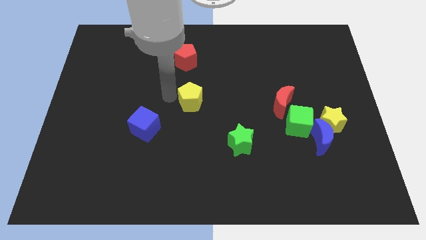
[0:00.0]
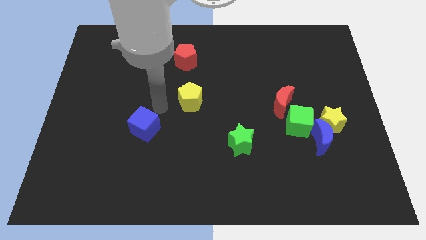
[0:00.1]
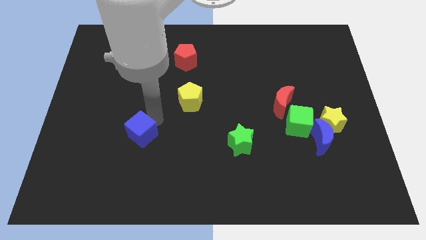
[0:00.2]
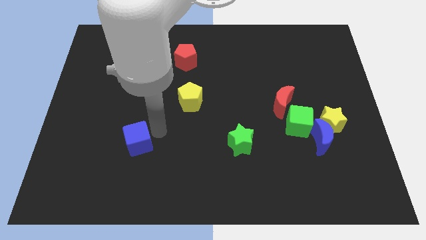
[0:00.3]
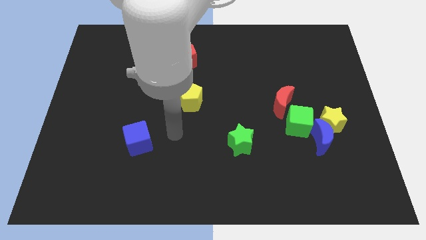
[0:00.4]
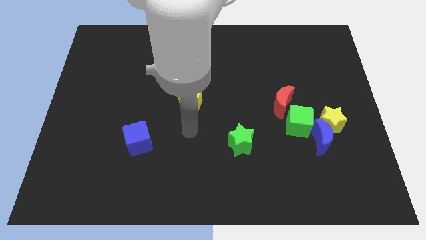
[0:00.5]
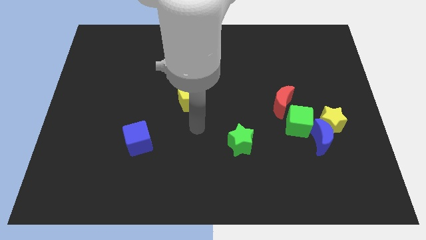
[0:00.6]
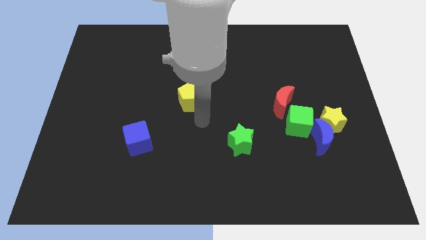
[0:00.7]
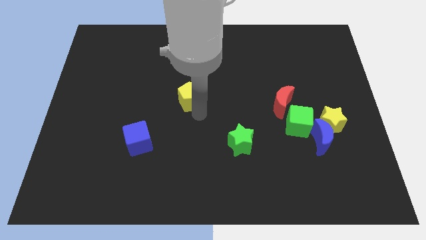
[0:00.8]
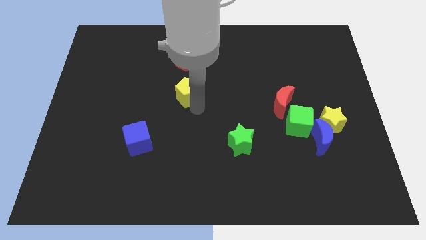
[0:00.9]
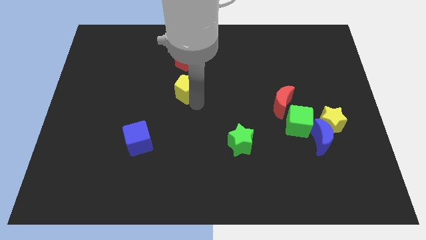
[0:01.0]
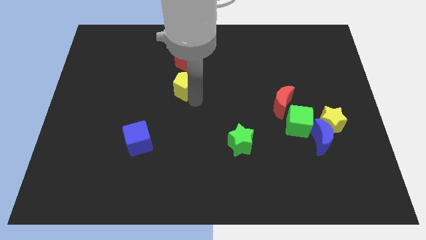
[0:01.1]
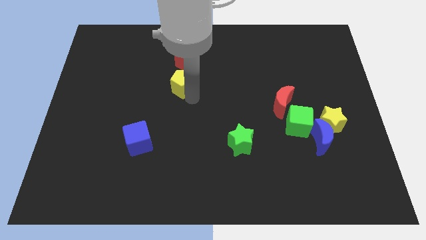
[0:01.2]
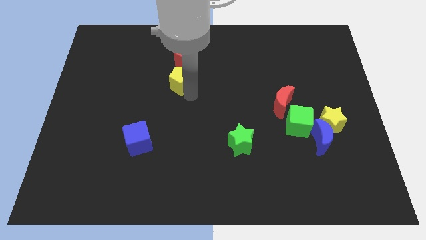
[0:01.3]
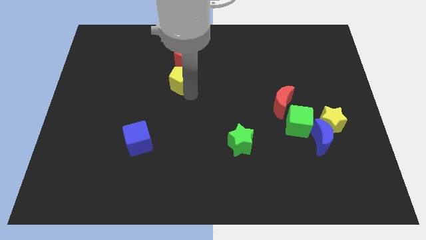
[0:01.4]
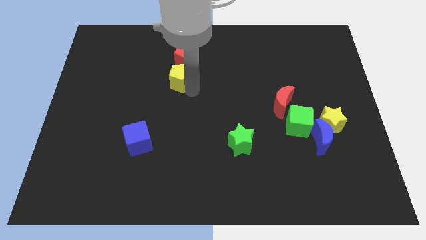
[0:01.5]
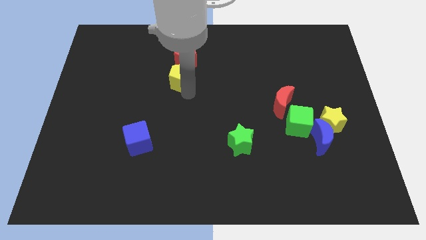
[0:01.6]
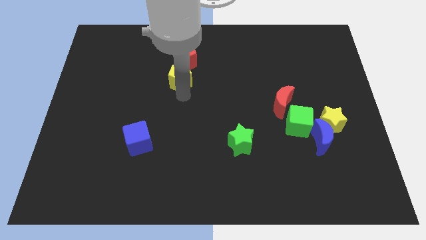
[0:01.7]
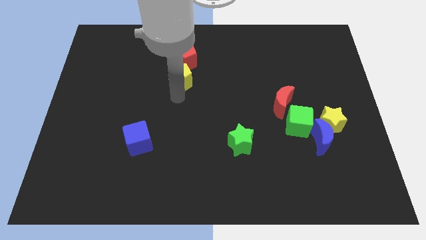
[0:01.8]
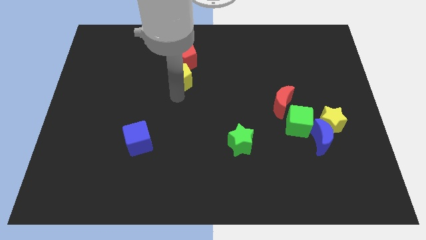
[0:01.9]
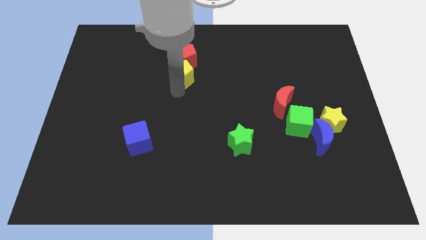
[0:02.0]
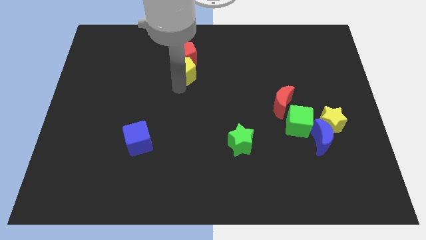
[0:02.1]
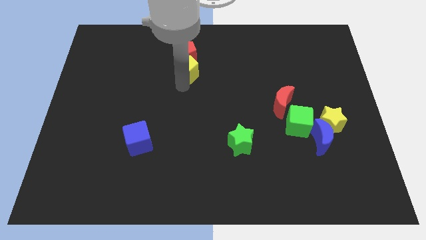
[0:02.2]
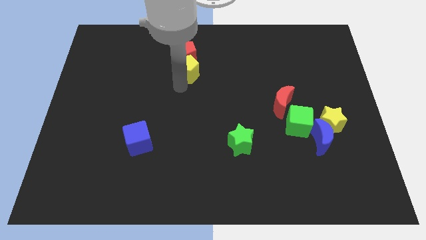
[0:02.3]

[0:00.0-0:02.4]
push yellow pentagon towards red pentagon

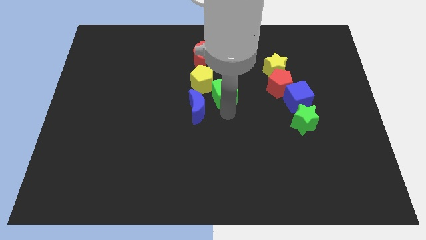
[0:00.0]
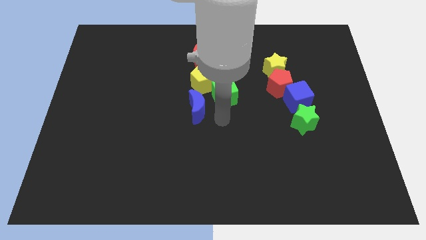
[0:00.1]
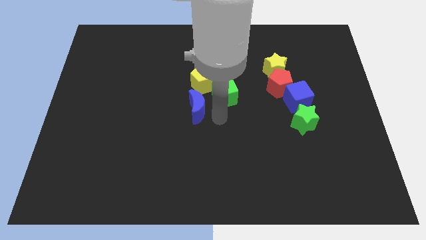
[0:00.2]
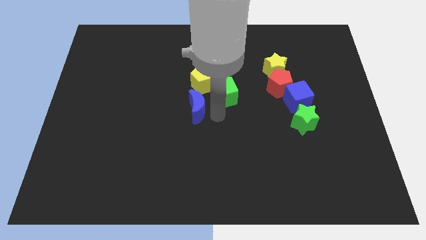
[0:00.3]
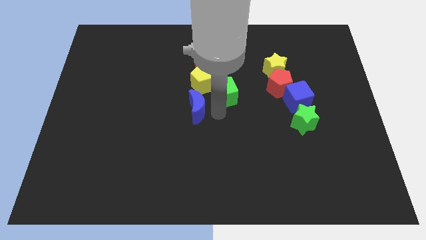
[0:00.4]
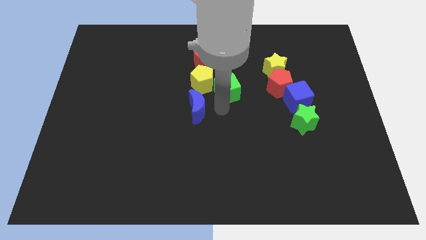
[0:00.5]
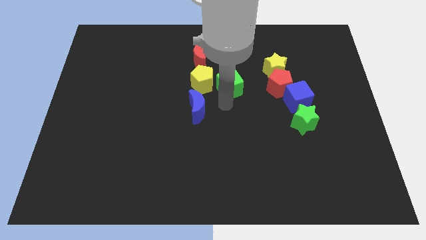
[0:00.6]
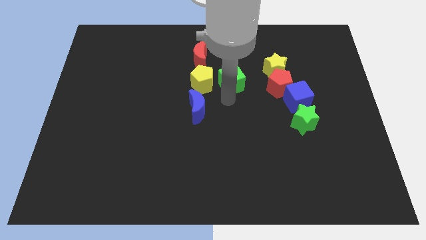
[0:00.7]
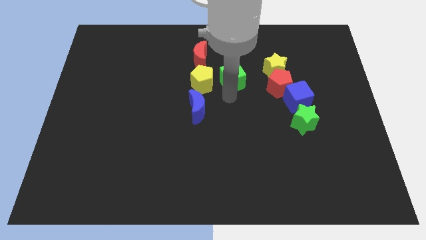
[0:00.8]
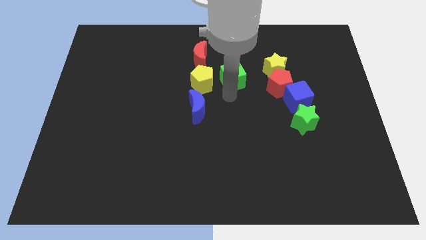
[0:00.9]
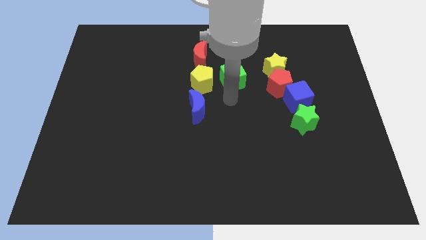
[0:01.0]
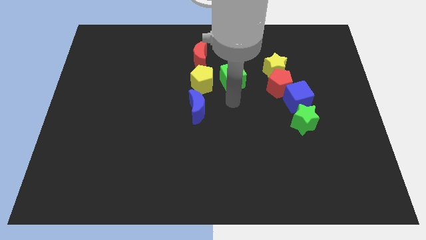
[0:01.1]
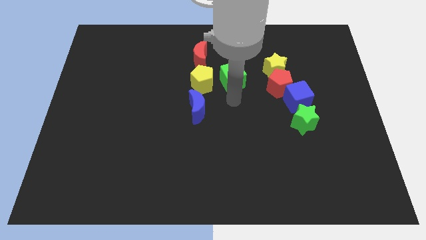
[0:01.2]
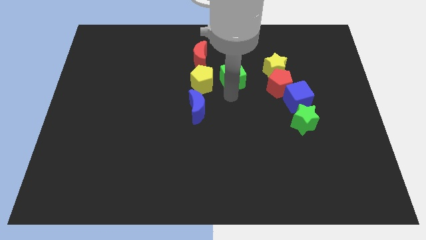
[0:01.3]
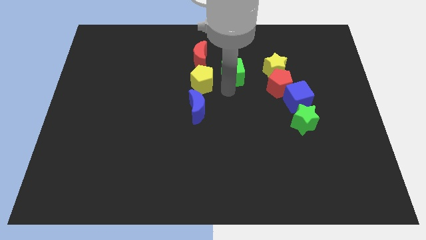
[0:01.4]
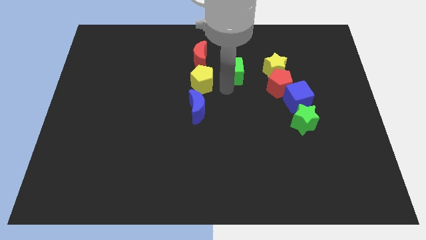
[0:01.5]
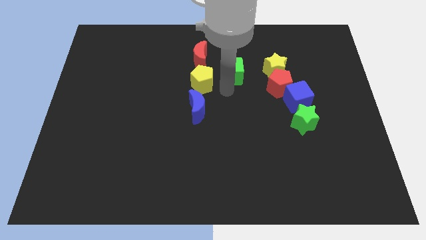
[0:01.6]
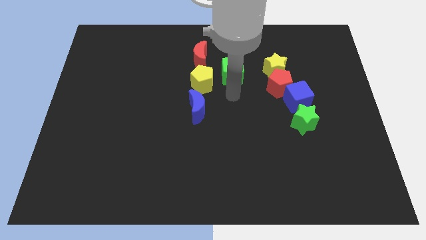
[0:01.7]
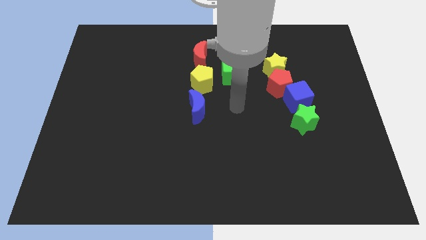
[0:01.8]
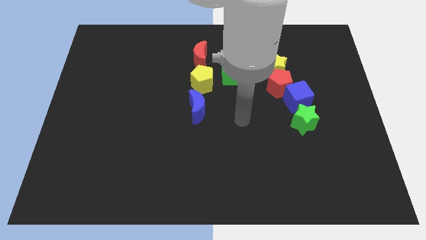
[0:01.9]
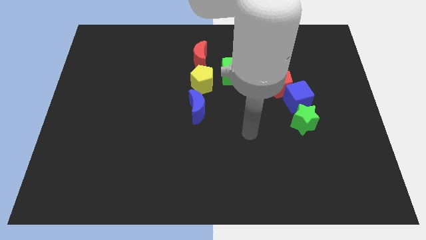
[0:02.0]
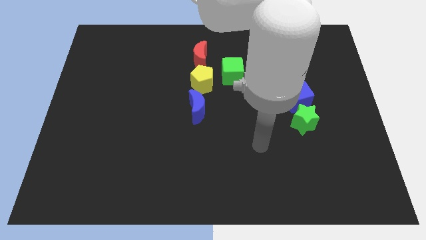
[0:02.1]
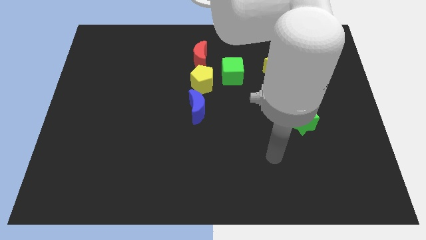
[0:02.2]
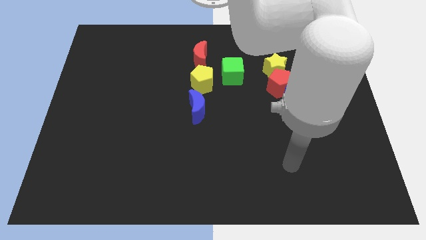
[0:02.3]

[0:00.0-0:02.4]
move green block to the right of yellow pentagon

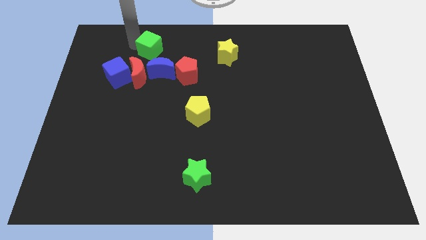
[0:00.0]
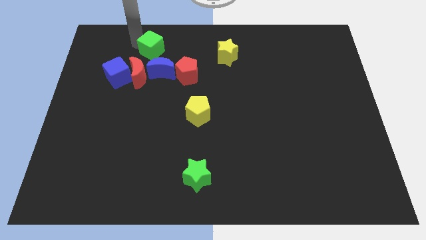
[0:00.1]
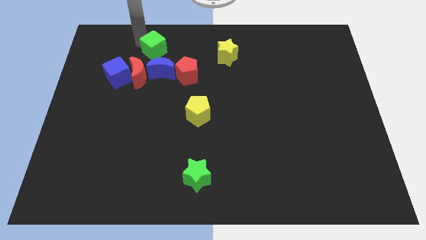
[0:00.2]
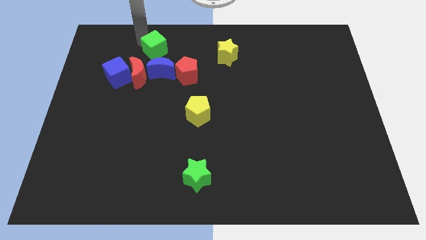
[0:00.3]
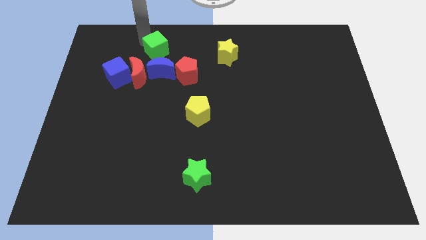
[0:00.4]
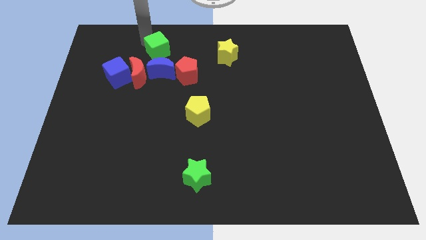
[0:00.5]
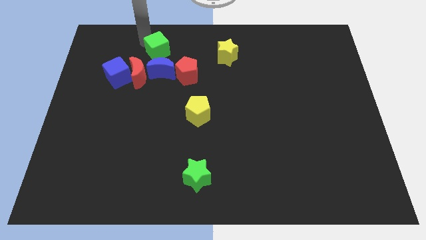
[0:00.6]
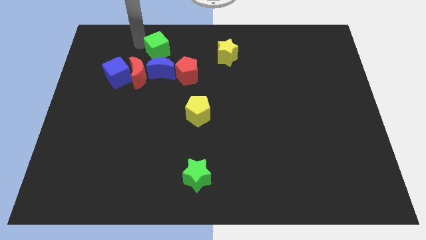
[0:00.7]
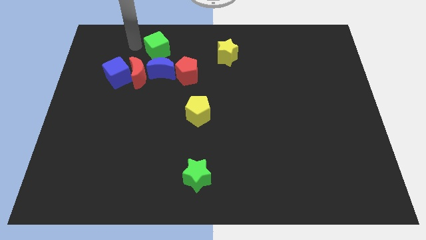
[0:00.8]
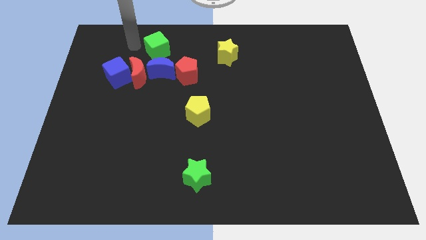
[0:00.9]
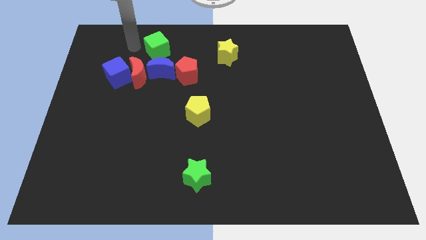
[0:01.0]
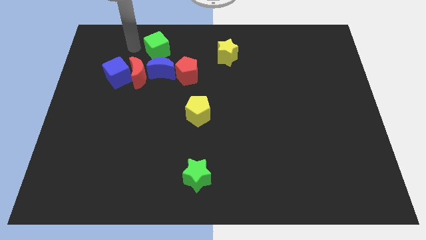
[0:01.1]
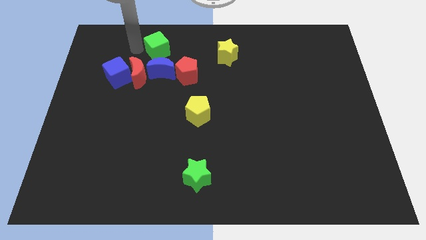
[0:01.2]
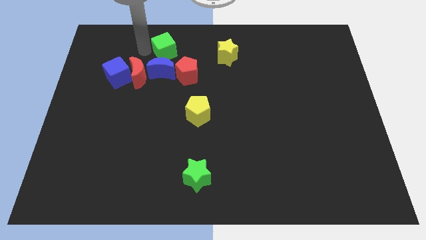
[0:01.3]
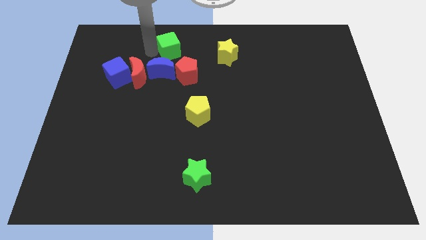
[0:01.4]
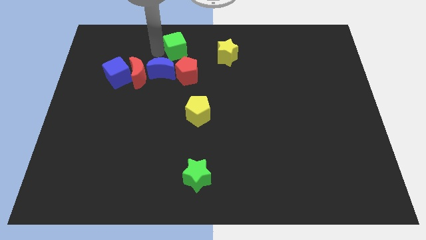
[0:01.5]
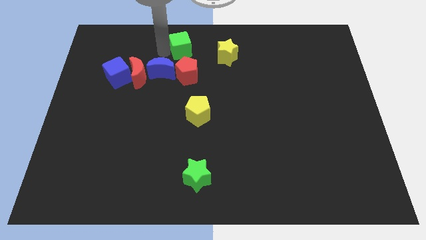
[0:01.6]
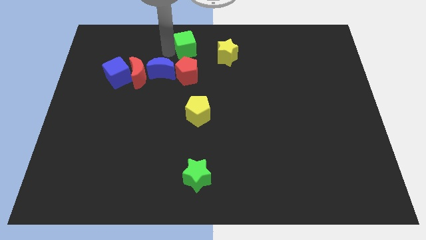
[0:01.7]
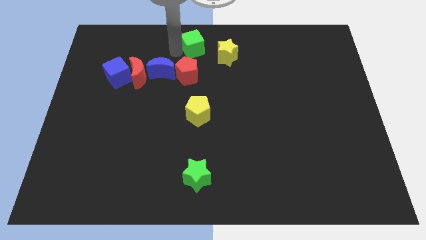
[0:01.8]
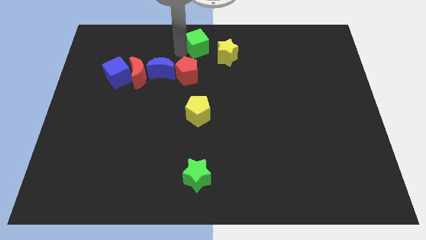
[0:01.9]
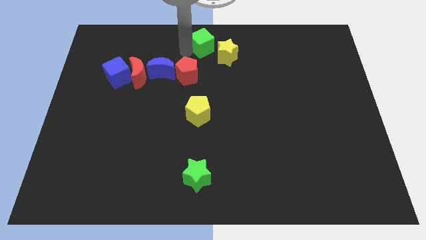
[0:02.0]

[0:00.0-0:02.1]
move the green cube to the top center of the board

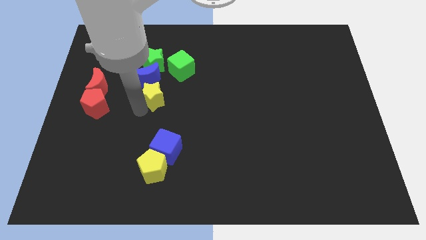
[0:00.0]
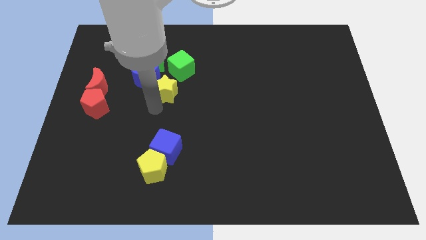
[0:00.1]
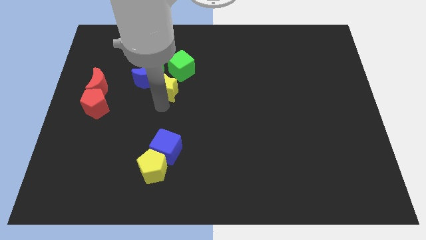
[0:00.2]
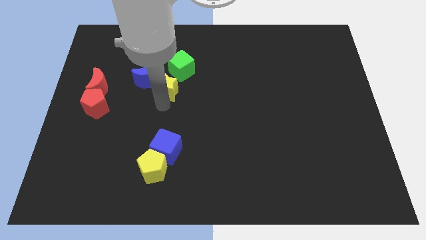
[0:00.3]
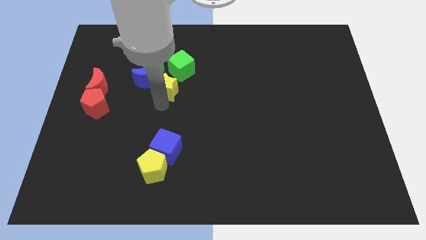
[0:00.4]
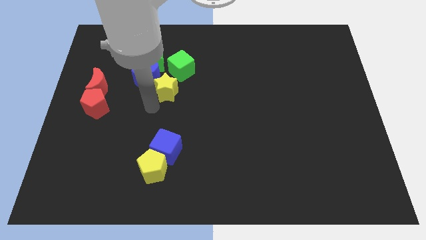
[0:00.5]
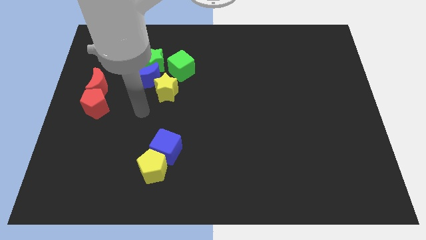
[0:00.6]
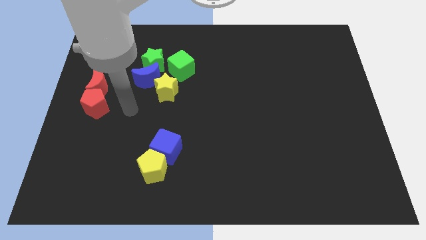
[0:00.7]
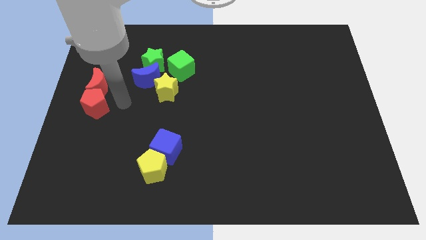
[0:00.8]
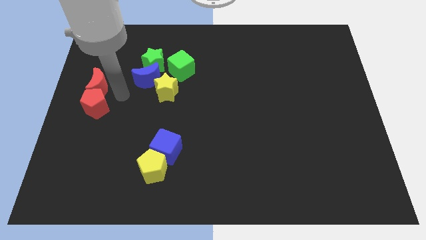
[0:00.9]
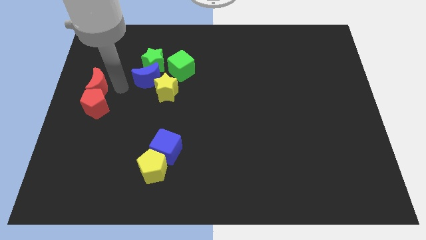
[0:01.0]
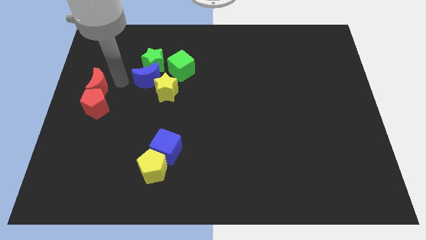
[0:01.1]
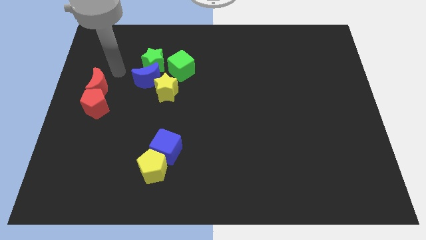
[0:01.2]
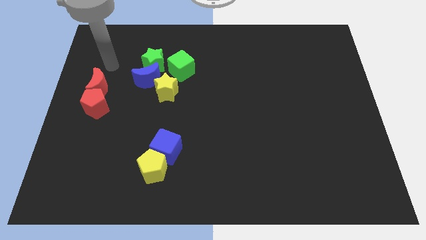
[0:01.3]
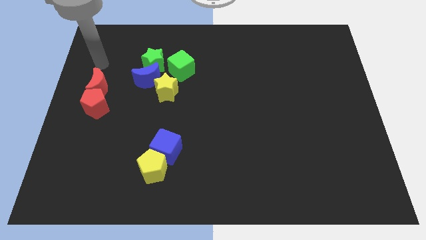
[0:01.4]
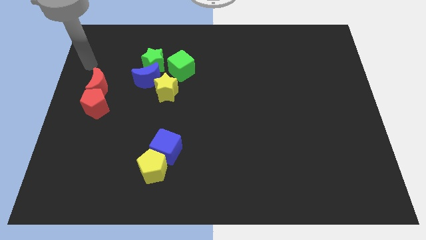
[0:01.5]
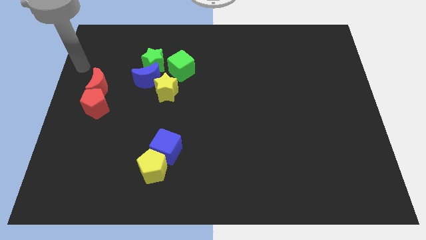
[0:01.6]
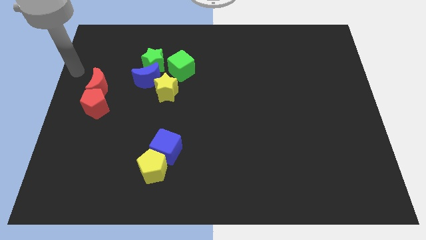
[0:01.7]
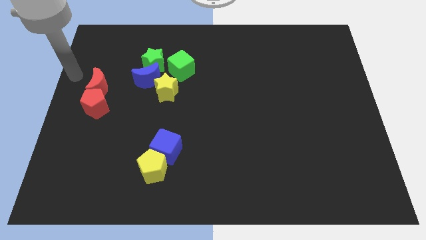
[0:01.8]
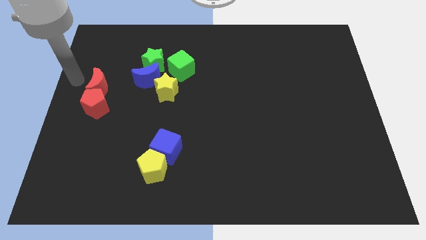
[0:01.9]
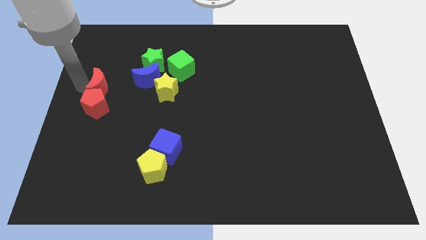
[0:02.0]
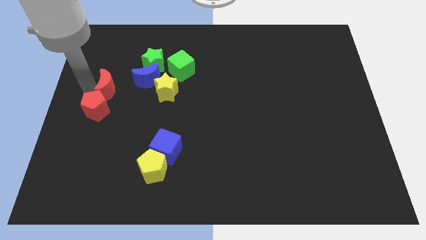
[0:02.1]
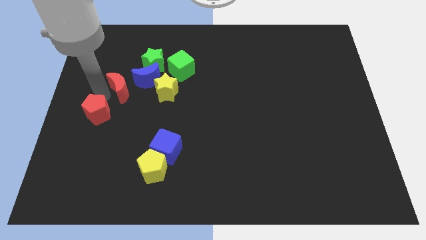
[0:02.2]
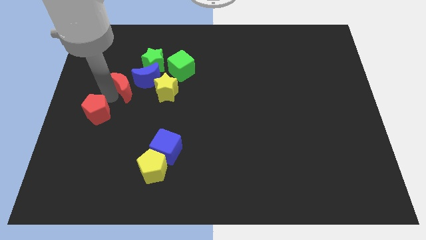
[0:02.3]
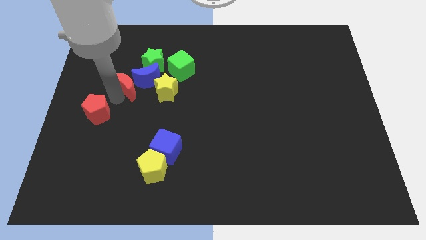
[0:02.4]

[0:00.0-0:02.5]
move your arm away from the yellow star
